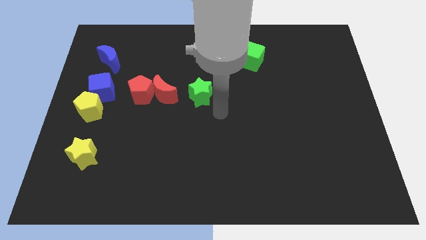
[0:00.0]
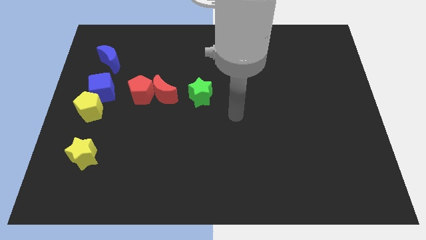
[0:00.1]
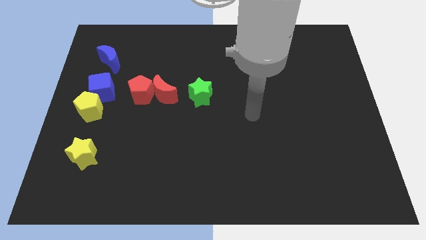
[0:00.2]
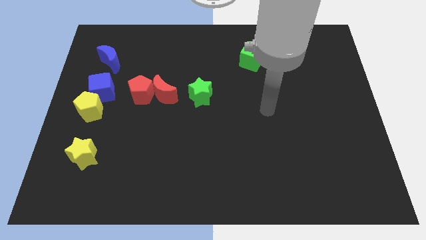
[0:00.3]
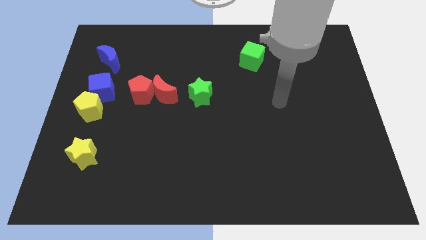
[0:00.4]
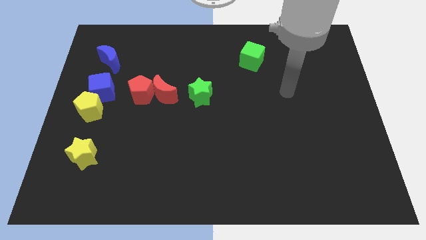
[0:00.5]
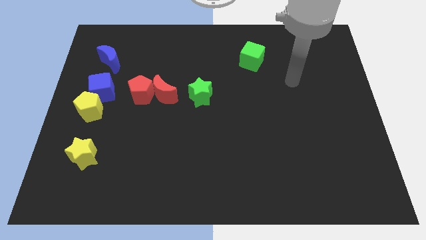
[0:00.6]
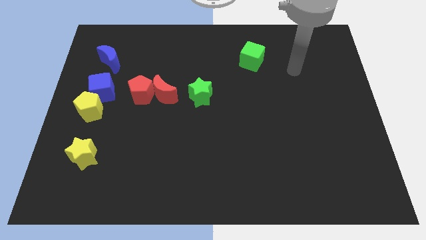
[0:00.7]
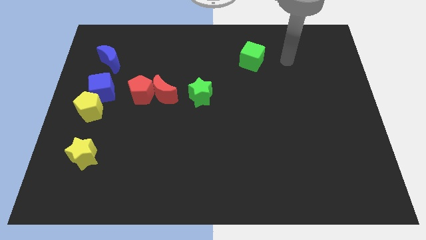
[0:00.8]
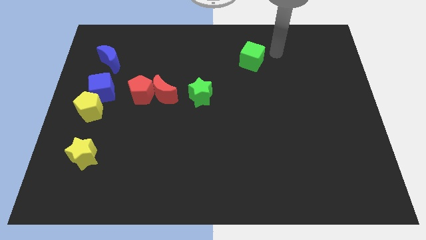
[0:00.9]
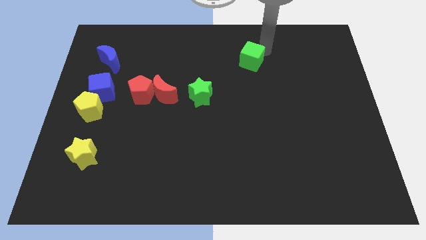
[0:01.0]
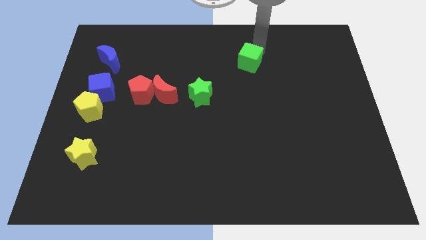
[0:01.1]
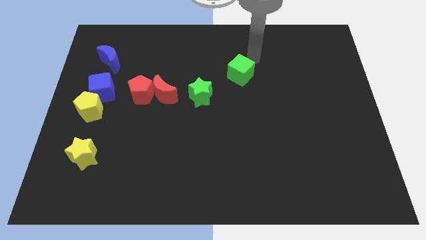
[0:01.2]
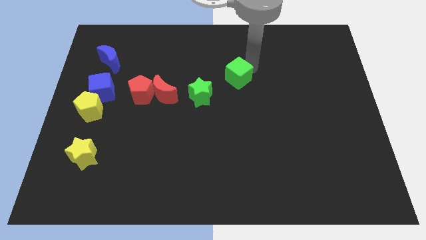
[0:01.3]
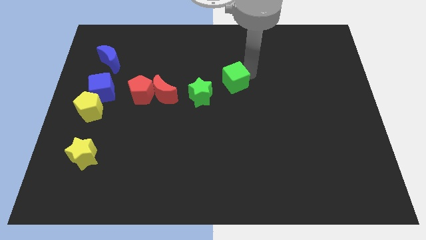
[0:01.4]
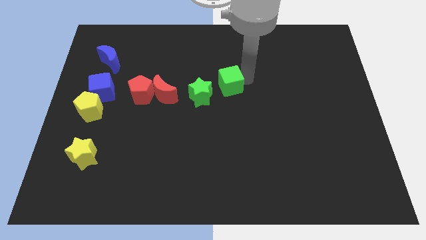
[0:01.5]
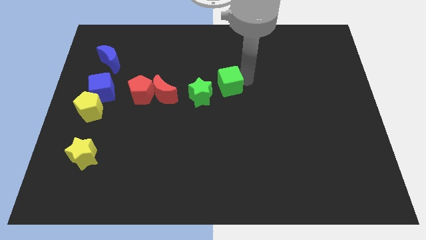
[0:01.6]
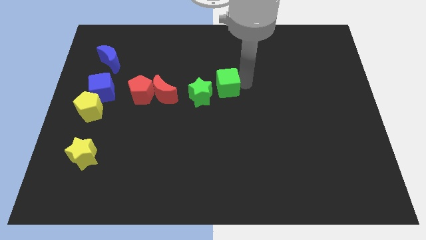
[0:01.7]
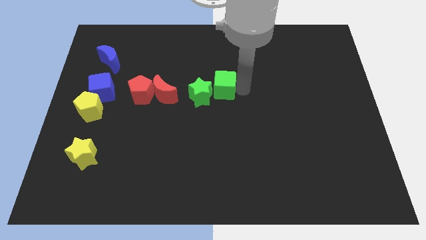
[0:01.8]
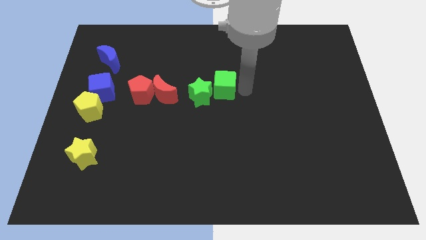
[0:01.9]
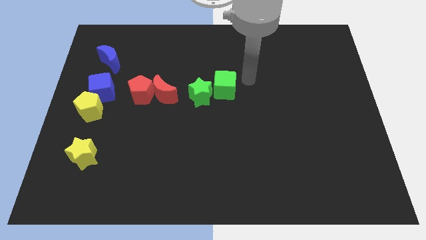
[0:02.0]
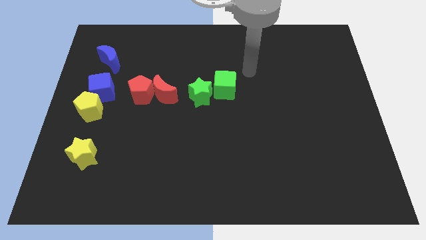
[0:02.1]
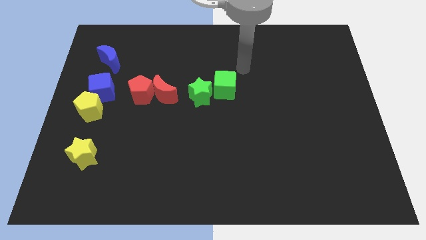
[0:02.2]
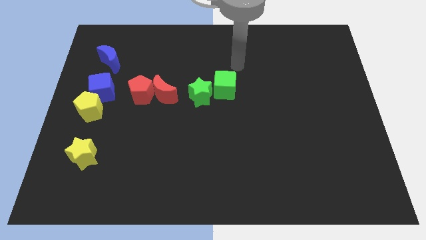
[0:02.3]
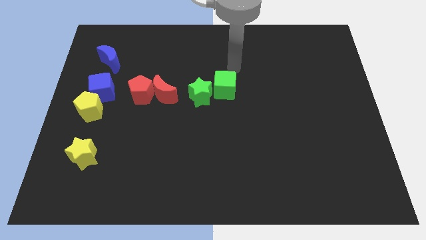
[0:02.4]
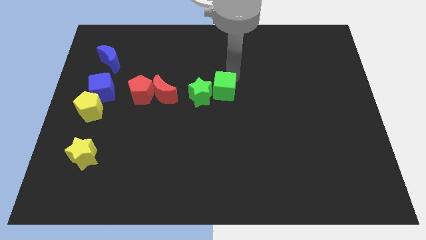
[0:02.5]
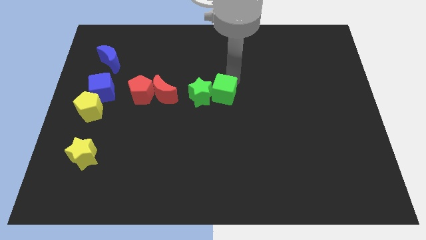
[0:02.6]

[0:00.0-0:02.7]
place the green cube right to the green star

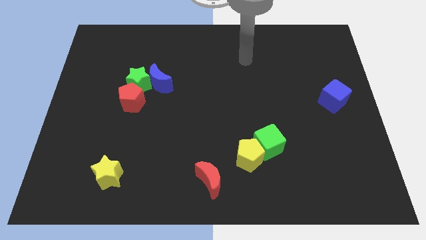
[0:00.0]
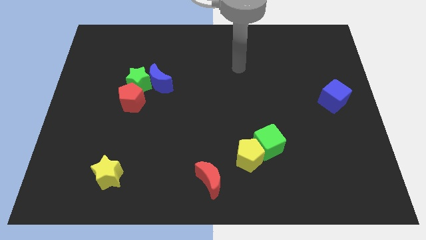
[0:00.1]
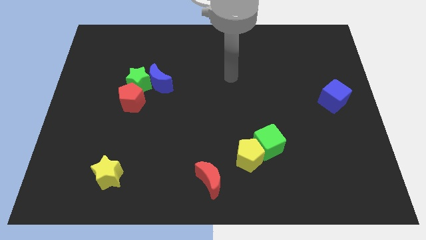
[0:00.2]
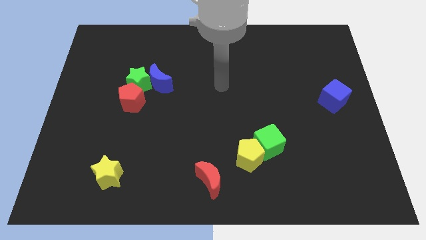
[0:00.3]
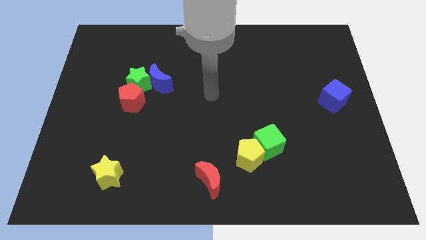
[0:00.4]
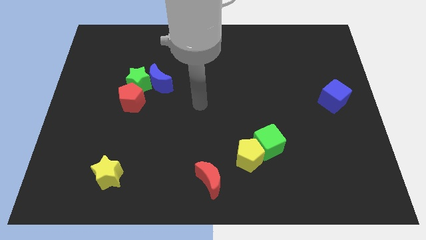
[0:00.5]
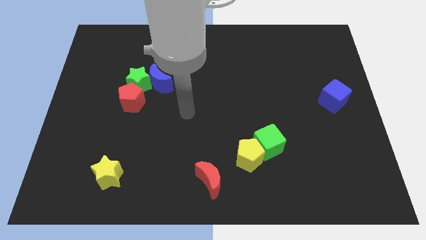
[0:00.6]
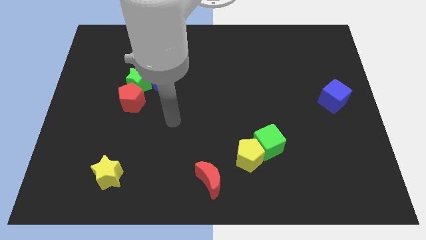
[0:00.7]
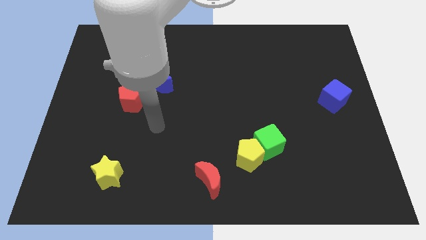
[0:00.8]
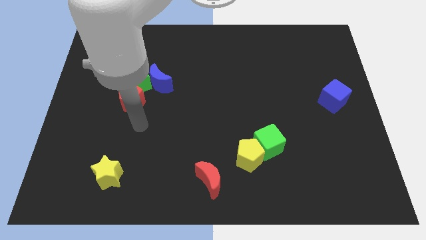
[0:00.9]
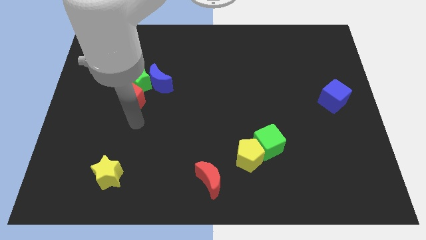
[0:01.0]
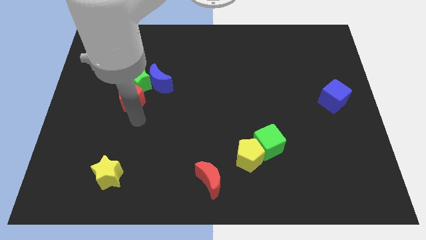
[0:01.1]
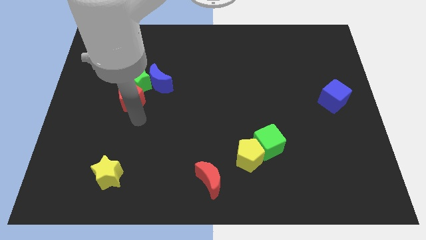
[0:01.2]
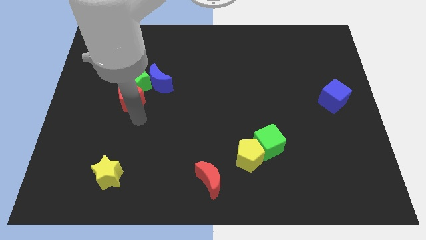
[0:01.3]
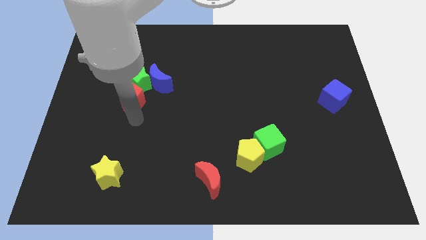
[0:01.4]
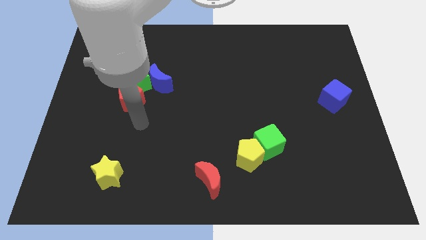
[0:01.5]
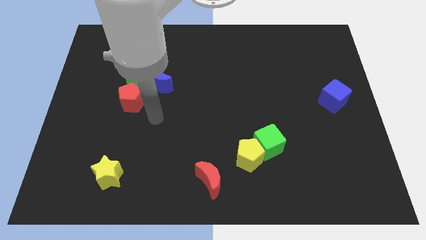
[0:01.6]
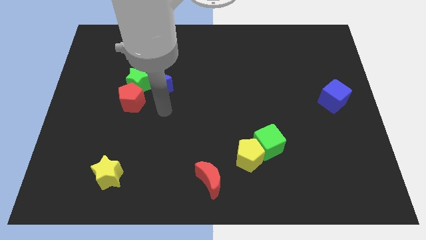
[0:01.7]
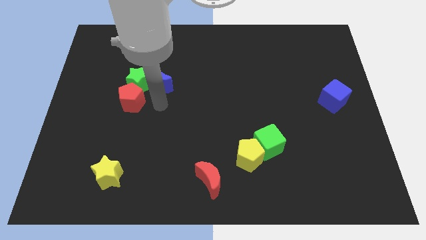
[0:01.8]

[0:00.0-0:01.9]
place your arm to the right of red pentagon

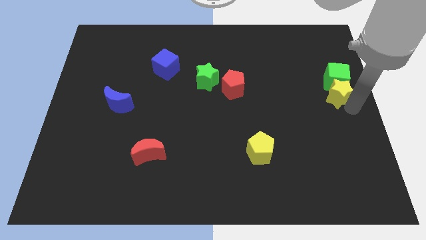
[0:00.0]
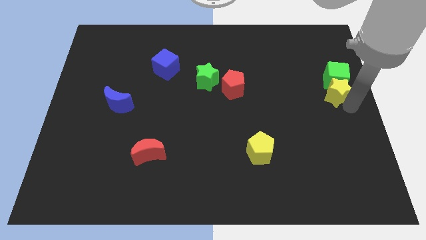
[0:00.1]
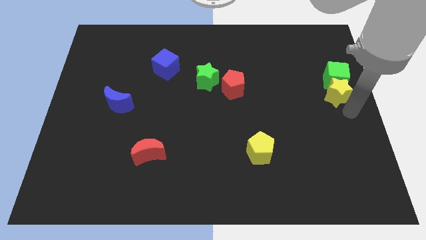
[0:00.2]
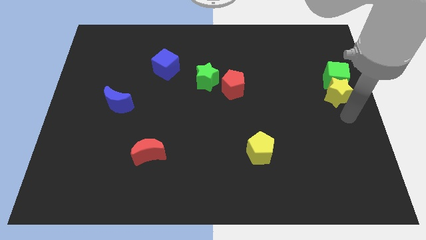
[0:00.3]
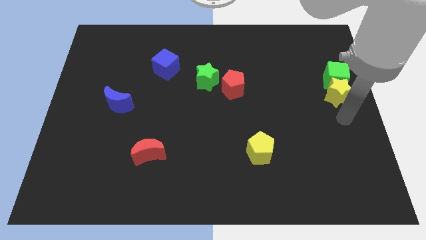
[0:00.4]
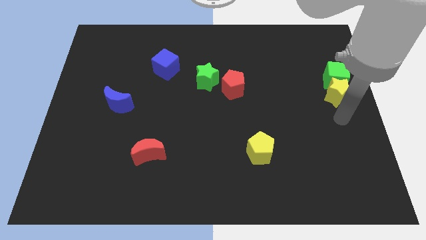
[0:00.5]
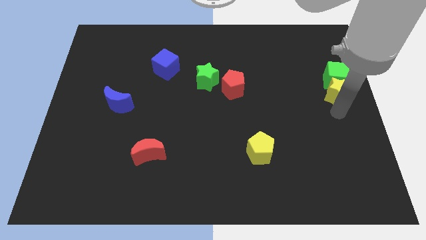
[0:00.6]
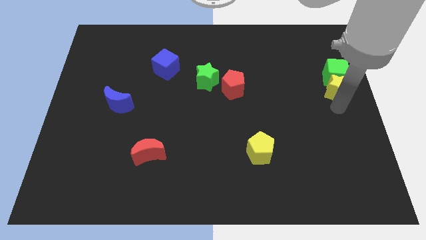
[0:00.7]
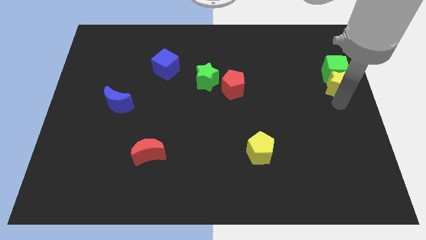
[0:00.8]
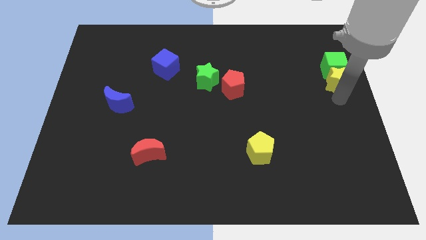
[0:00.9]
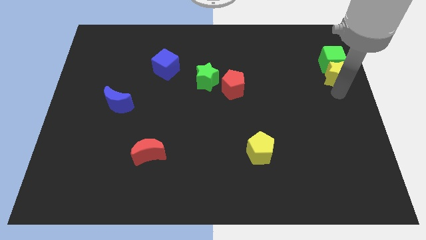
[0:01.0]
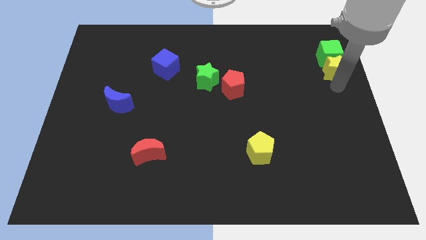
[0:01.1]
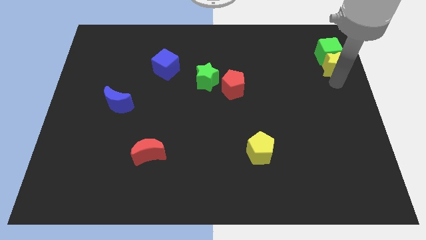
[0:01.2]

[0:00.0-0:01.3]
push the yellow star with the green cube towards the top right of the board

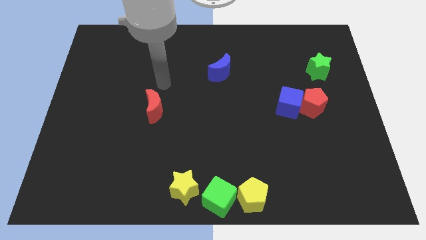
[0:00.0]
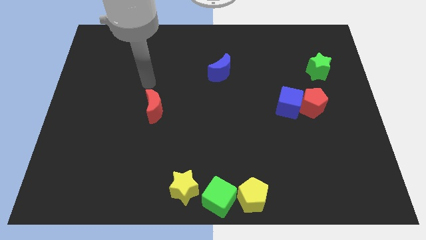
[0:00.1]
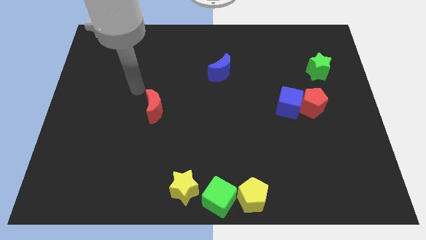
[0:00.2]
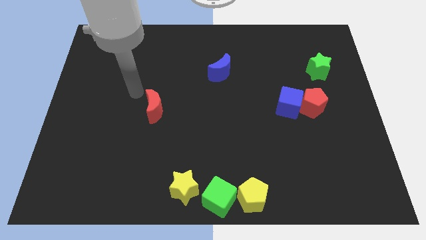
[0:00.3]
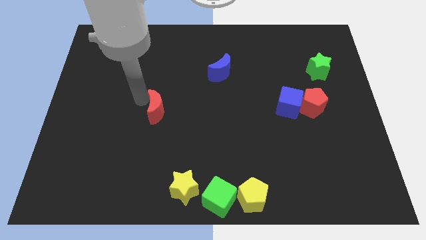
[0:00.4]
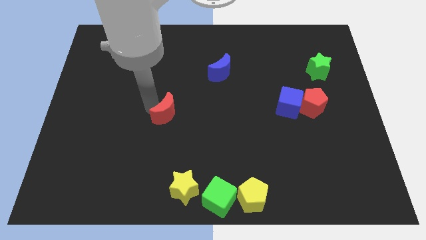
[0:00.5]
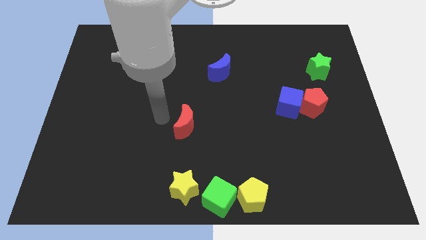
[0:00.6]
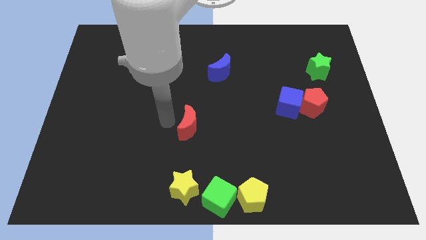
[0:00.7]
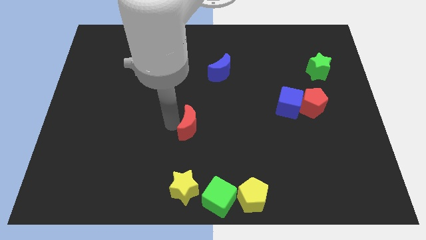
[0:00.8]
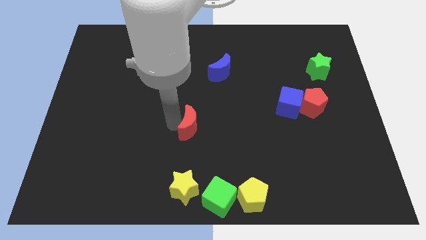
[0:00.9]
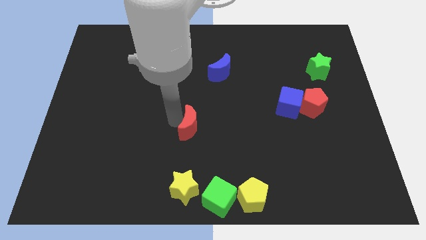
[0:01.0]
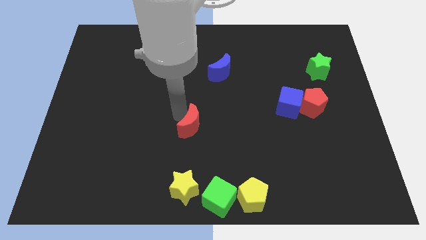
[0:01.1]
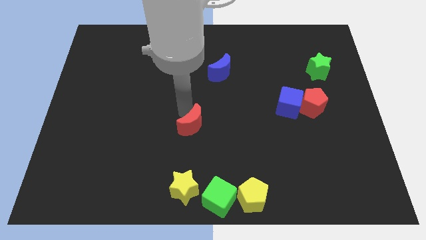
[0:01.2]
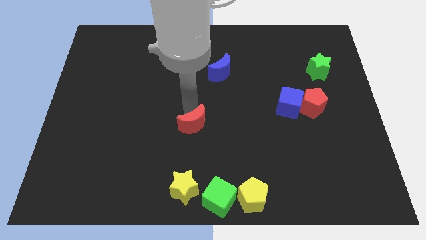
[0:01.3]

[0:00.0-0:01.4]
move red moon parallel above the yellow star

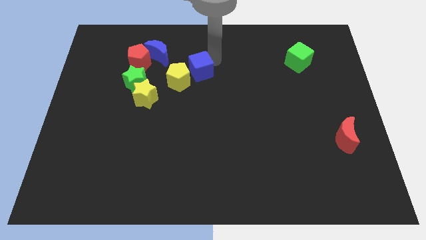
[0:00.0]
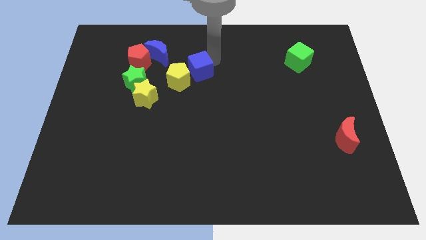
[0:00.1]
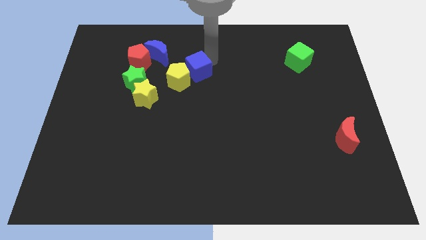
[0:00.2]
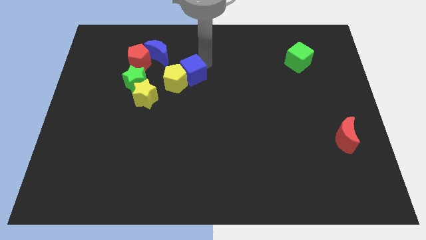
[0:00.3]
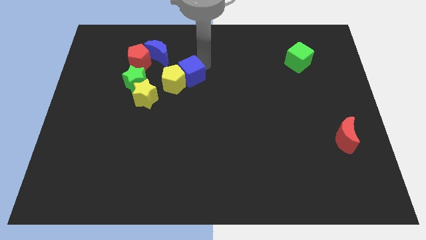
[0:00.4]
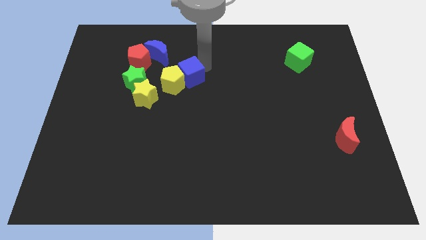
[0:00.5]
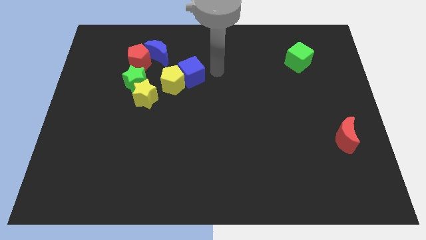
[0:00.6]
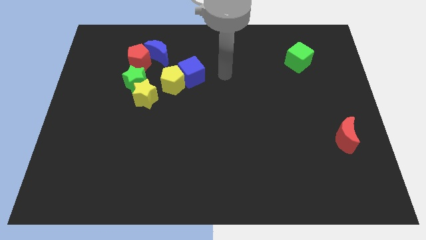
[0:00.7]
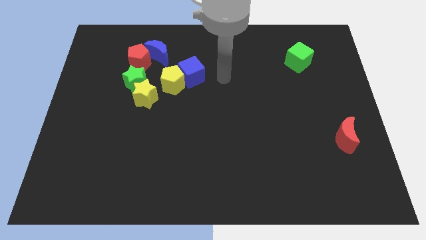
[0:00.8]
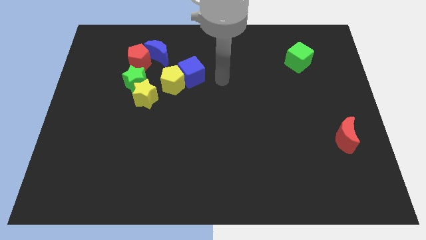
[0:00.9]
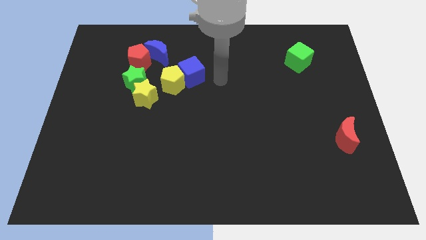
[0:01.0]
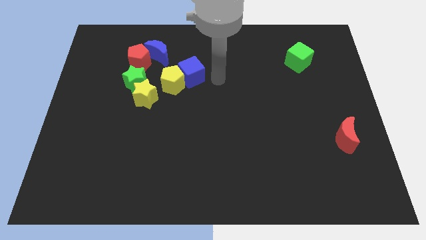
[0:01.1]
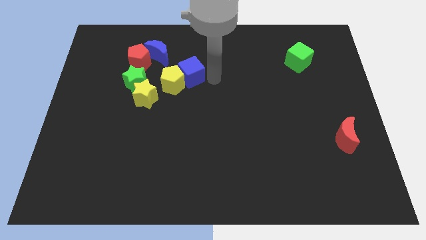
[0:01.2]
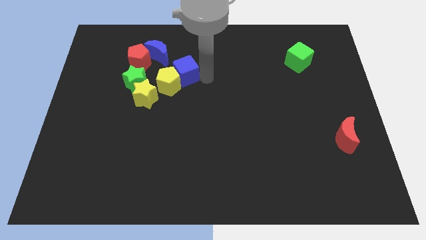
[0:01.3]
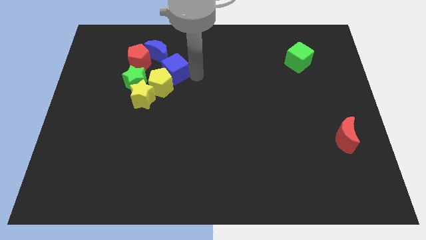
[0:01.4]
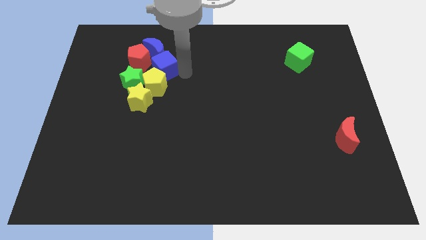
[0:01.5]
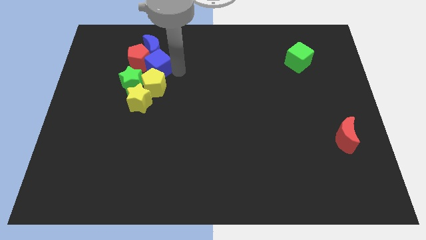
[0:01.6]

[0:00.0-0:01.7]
push the blue square into the group of blocks
